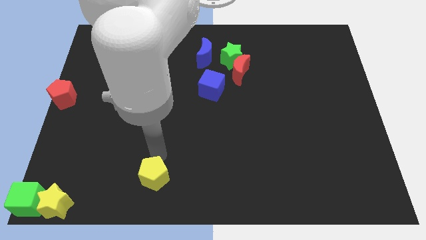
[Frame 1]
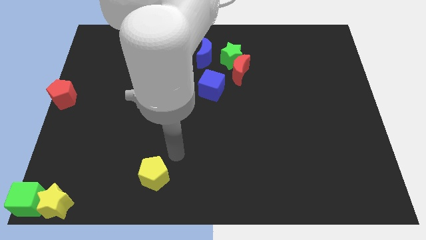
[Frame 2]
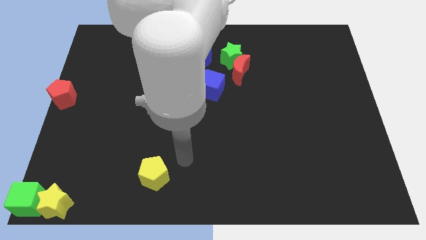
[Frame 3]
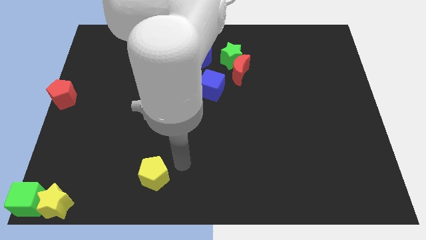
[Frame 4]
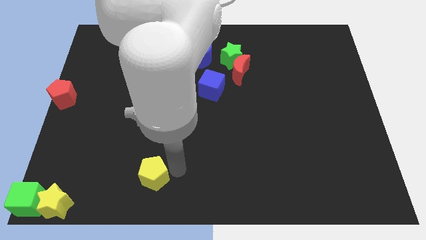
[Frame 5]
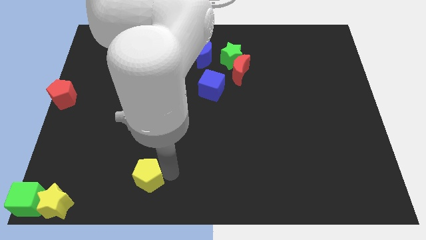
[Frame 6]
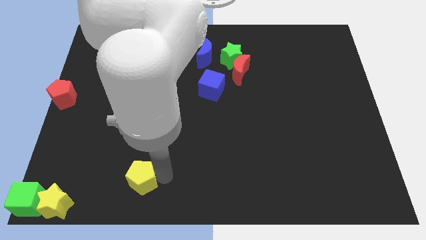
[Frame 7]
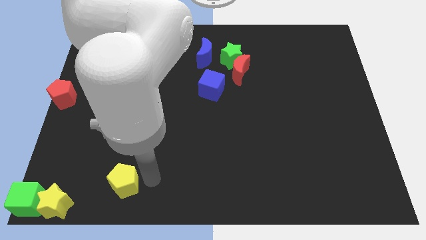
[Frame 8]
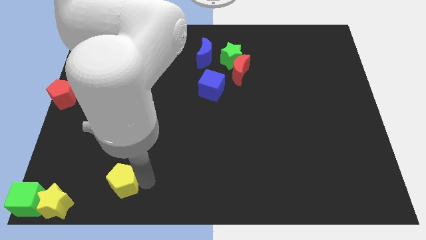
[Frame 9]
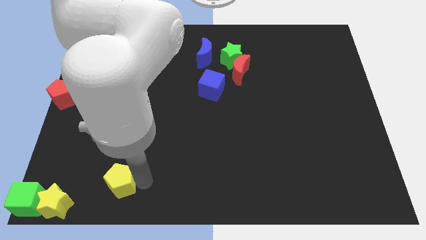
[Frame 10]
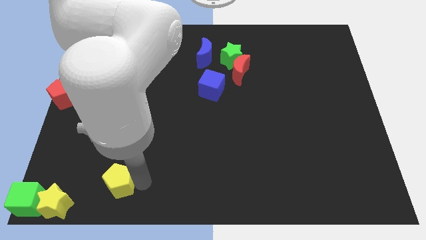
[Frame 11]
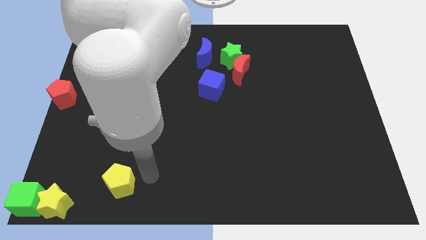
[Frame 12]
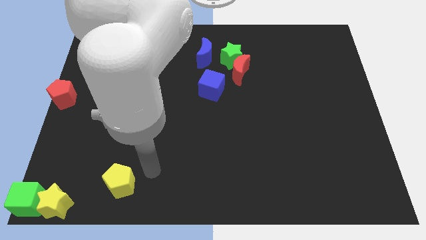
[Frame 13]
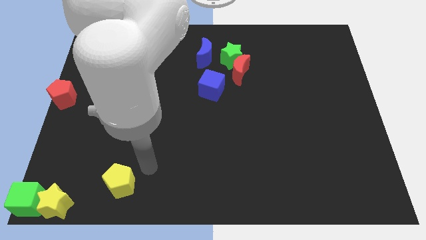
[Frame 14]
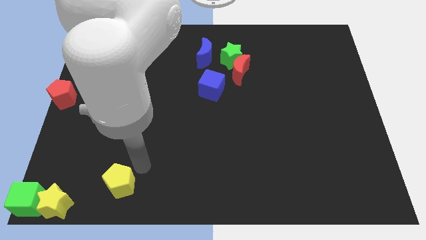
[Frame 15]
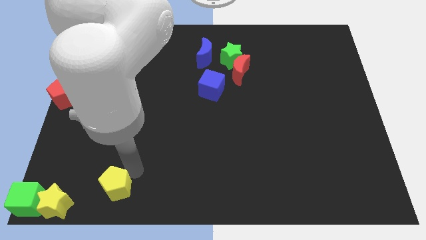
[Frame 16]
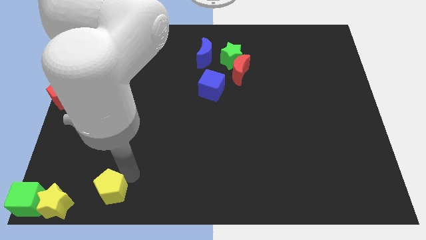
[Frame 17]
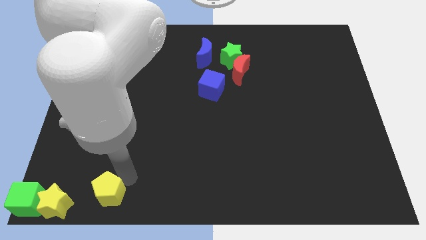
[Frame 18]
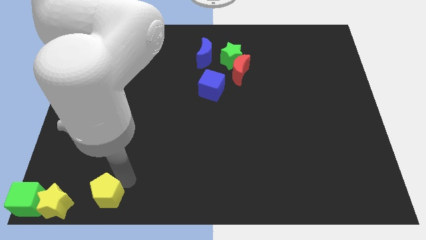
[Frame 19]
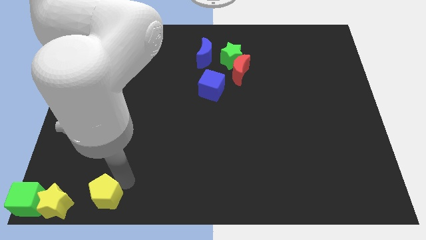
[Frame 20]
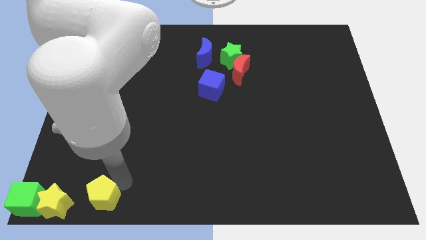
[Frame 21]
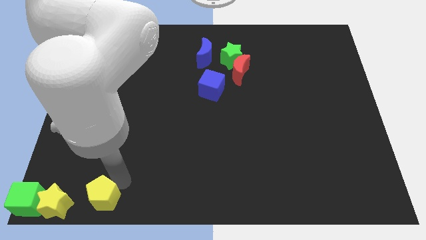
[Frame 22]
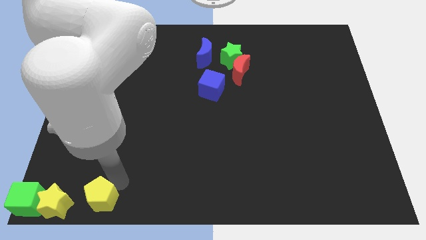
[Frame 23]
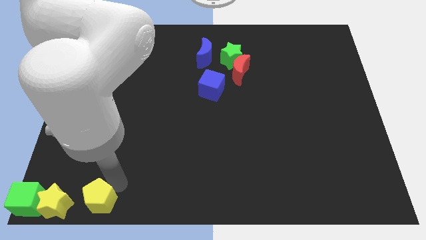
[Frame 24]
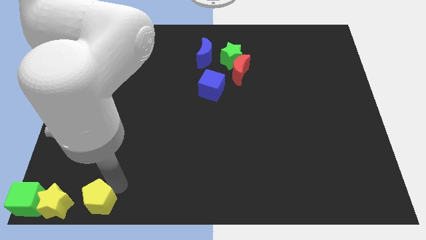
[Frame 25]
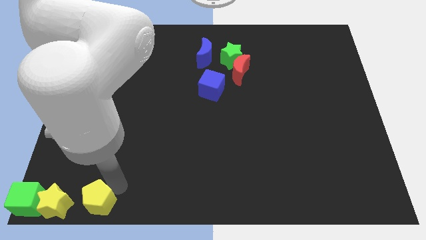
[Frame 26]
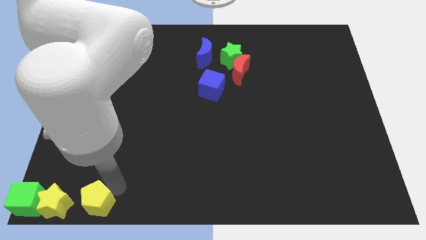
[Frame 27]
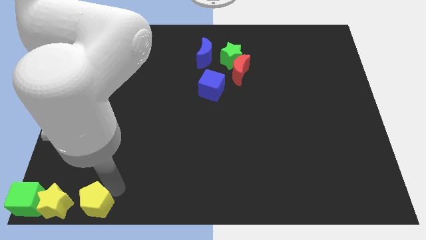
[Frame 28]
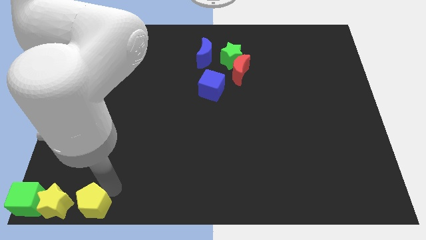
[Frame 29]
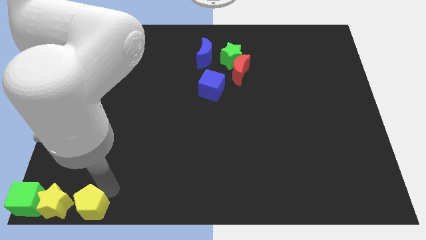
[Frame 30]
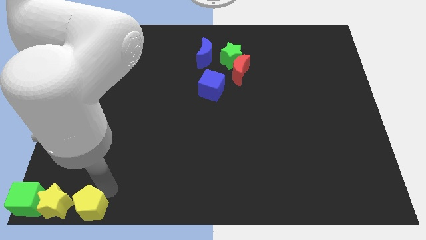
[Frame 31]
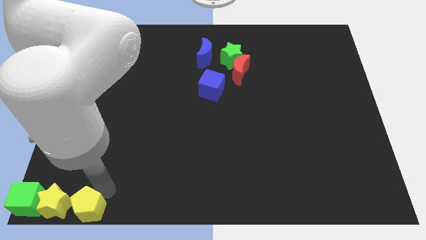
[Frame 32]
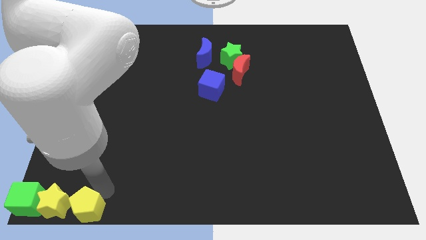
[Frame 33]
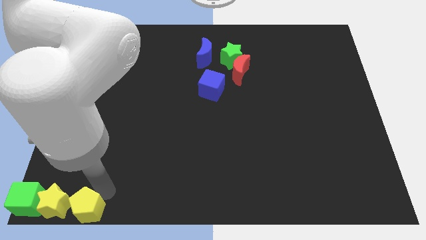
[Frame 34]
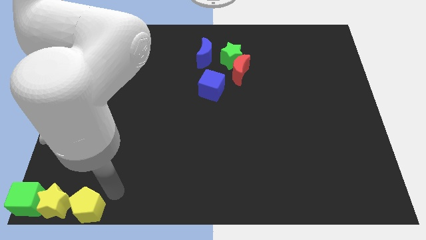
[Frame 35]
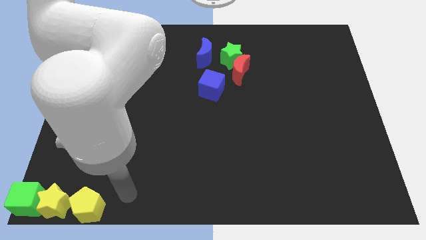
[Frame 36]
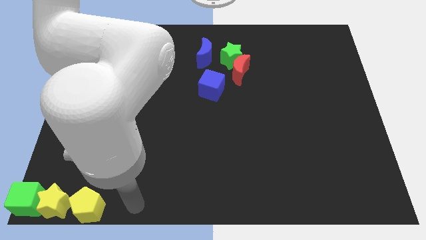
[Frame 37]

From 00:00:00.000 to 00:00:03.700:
put the yellow pentagon parallel to yellow star

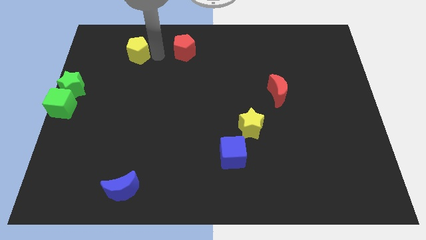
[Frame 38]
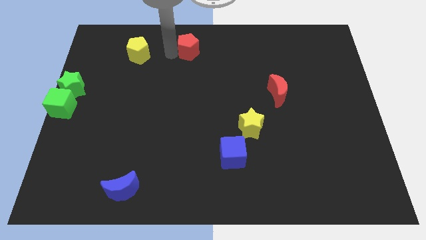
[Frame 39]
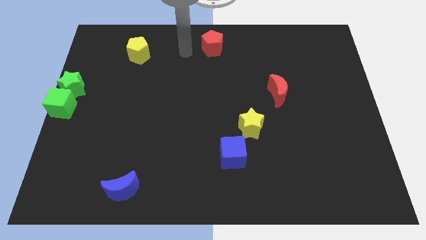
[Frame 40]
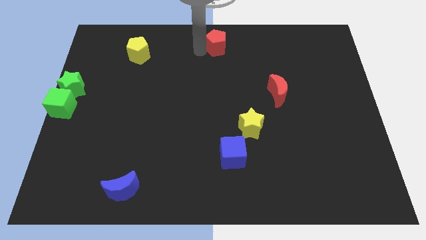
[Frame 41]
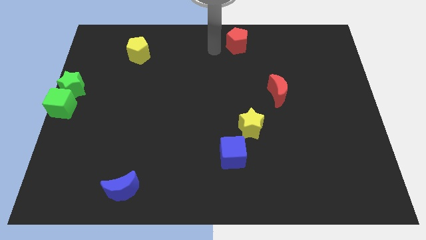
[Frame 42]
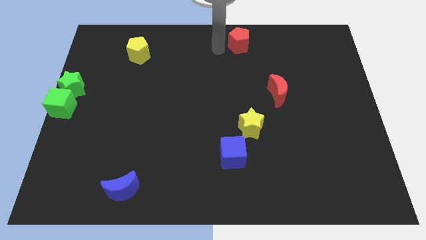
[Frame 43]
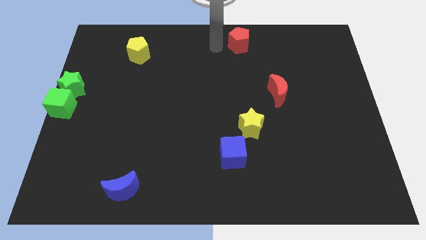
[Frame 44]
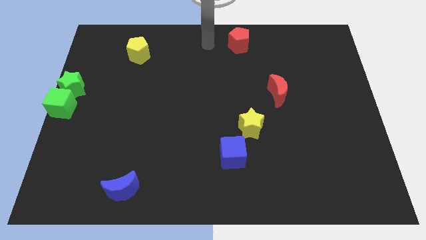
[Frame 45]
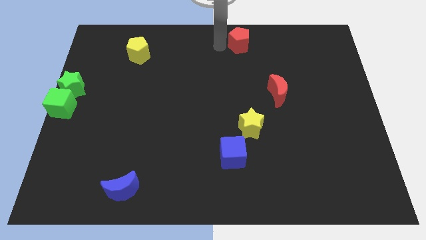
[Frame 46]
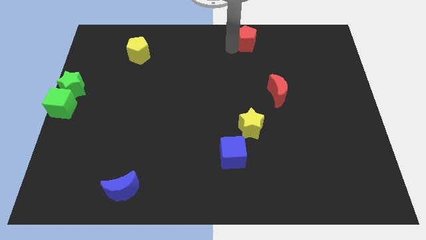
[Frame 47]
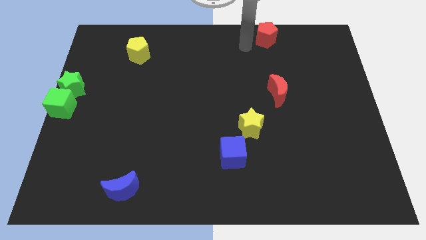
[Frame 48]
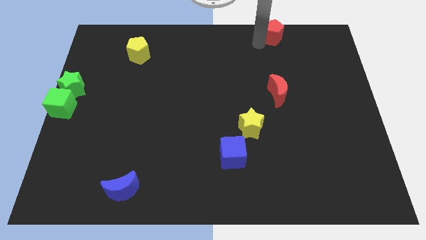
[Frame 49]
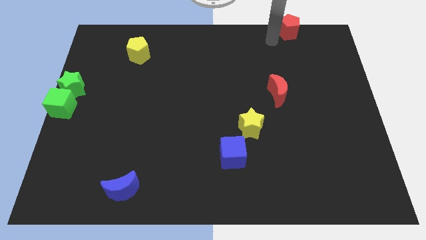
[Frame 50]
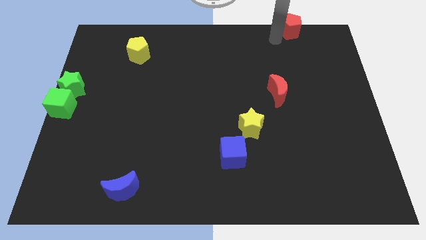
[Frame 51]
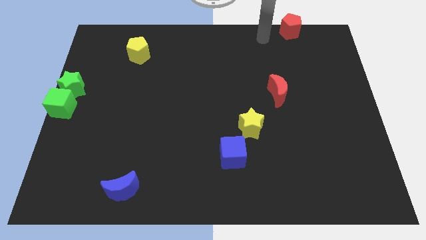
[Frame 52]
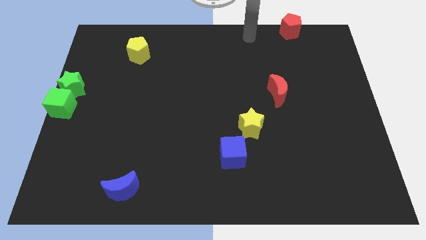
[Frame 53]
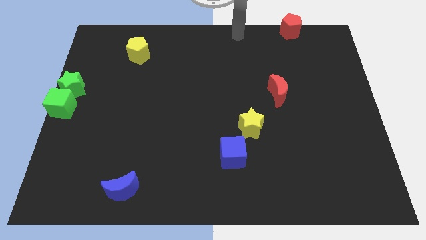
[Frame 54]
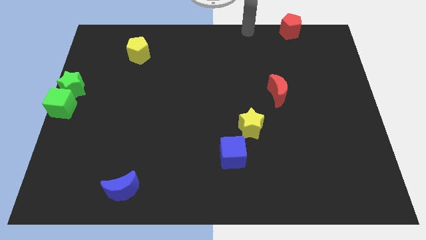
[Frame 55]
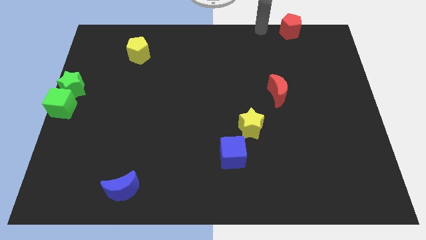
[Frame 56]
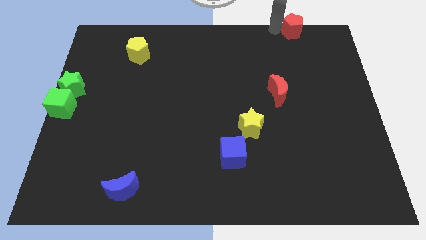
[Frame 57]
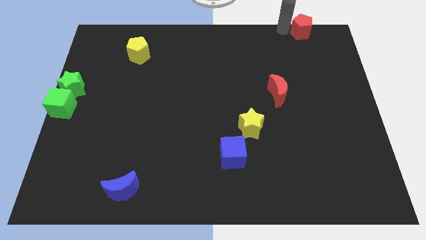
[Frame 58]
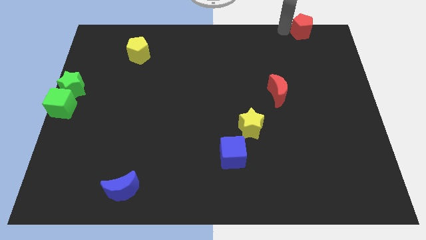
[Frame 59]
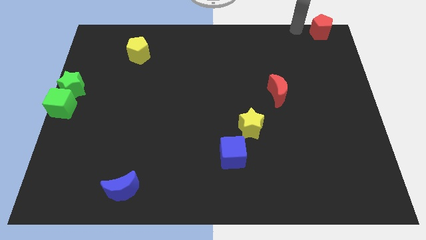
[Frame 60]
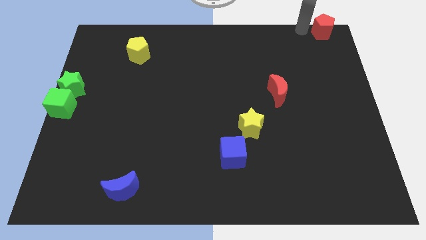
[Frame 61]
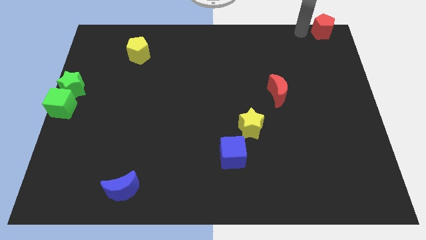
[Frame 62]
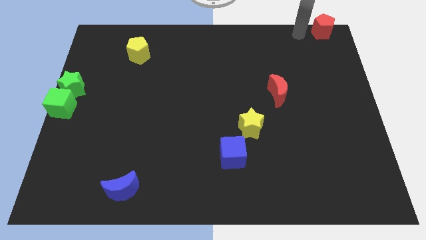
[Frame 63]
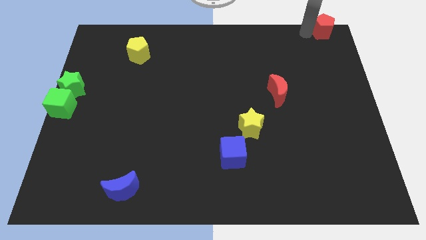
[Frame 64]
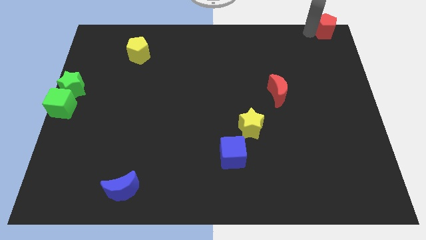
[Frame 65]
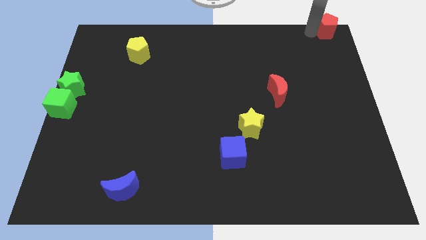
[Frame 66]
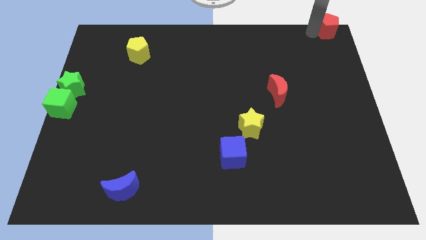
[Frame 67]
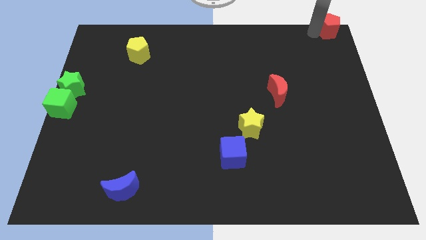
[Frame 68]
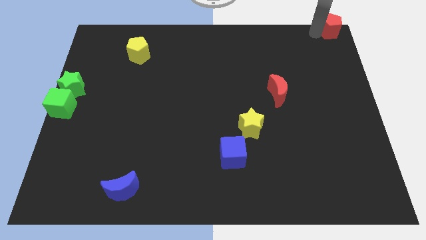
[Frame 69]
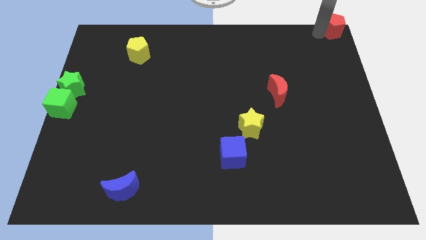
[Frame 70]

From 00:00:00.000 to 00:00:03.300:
move the red pentagon to top right corner

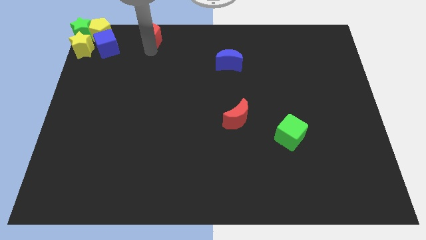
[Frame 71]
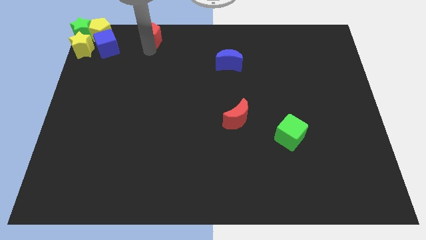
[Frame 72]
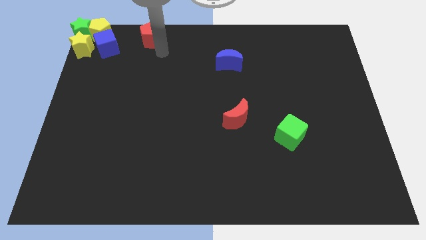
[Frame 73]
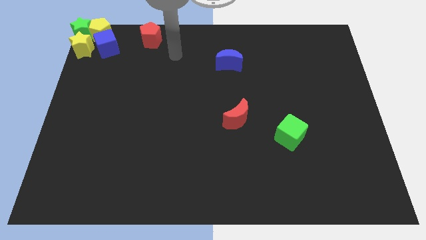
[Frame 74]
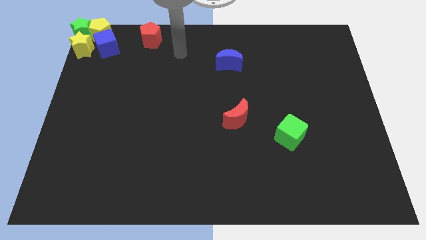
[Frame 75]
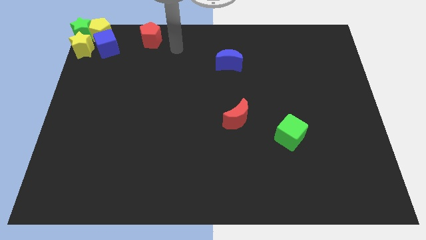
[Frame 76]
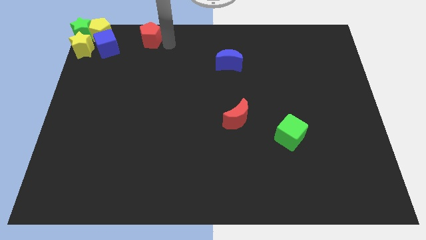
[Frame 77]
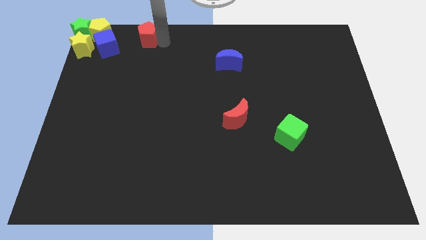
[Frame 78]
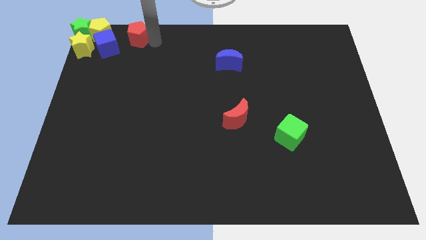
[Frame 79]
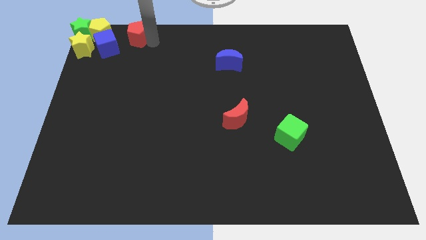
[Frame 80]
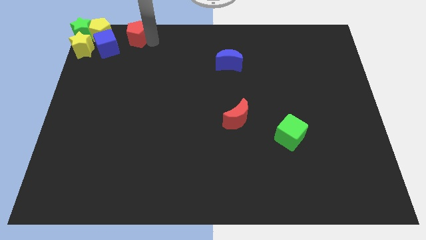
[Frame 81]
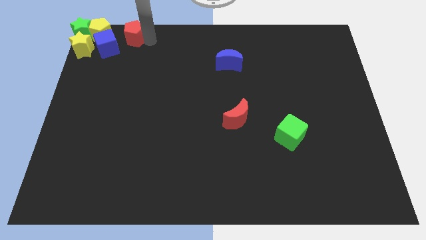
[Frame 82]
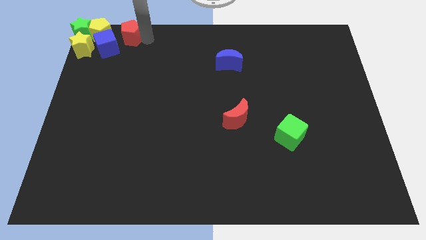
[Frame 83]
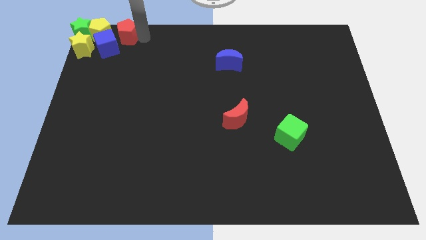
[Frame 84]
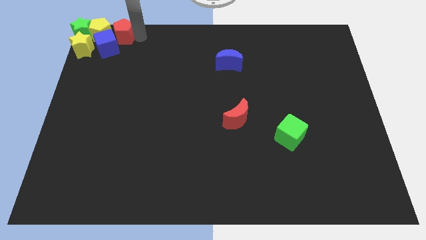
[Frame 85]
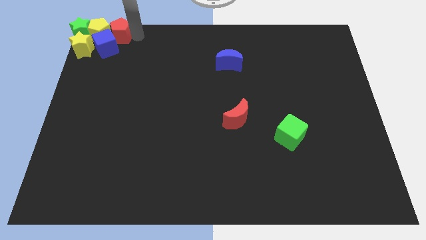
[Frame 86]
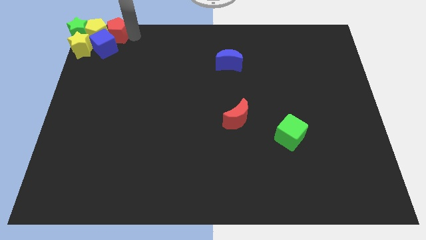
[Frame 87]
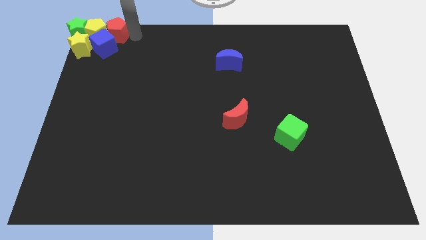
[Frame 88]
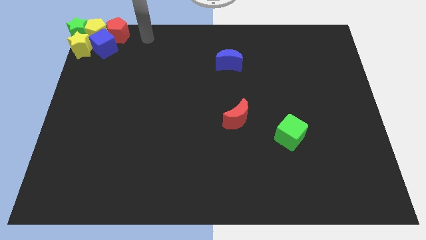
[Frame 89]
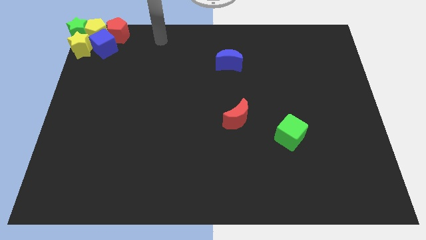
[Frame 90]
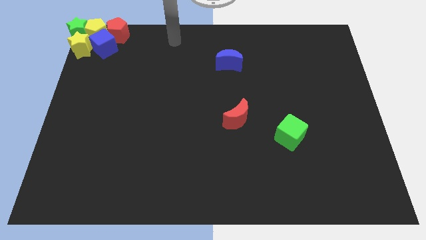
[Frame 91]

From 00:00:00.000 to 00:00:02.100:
add red pentagon into group of blocks in top left
